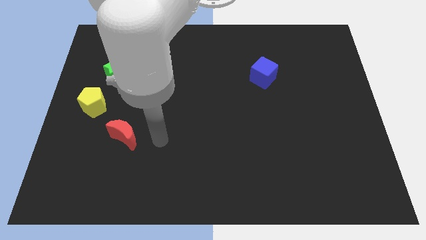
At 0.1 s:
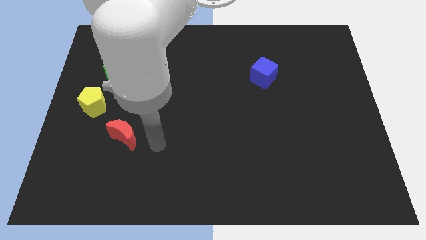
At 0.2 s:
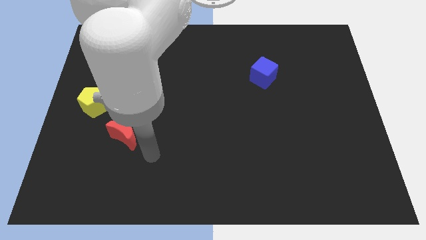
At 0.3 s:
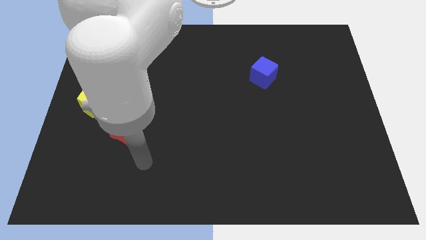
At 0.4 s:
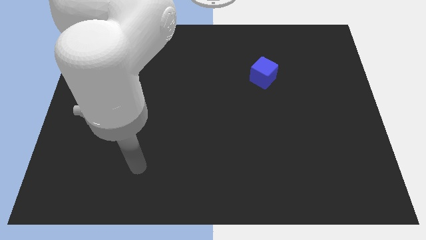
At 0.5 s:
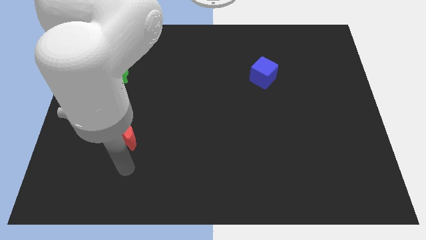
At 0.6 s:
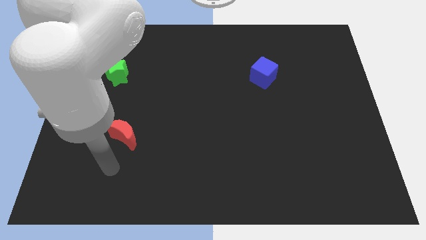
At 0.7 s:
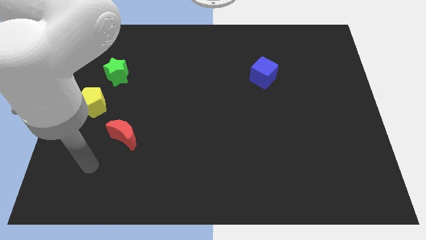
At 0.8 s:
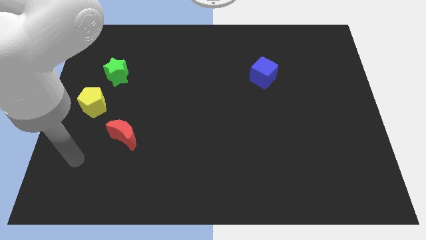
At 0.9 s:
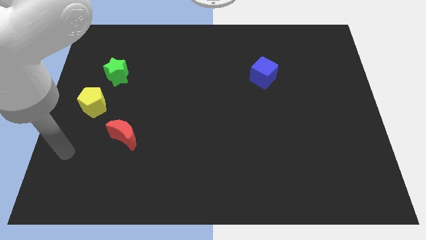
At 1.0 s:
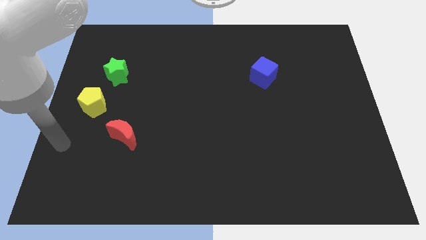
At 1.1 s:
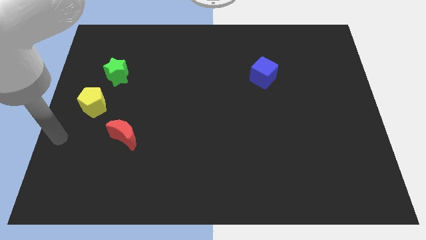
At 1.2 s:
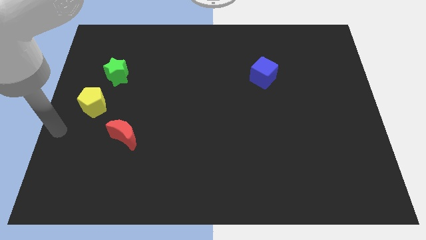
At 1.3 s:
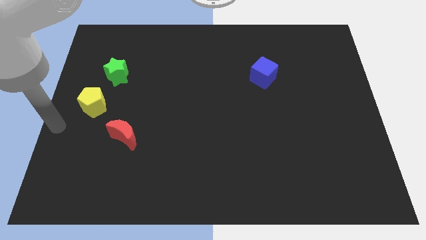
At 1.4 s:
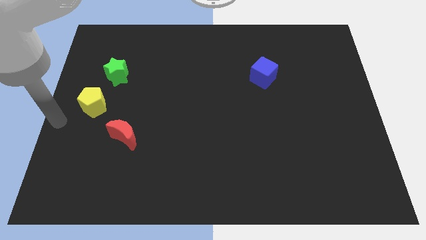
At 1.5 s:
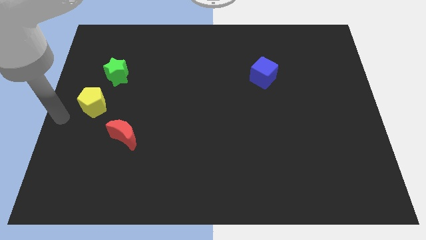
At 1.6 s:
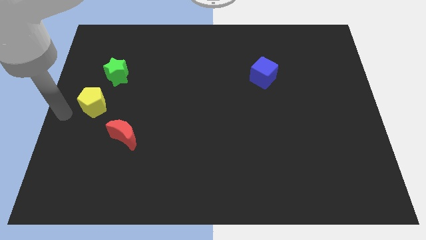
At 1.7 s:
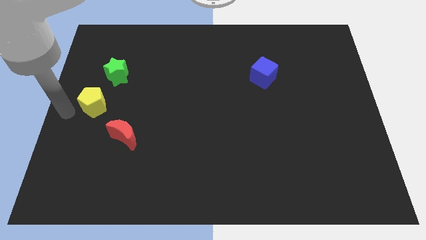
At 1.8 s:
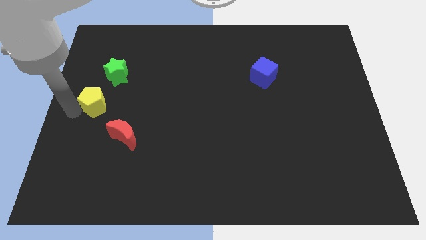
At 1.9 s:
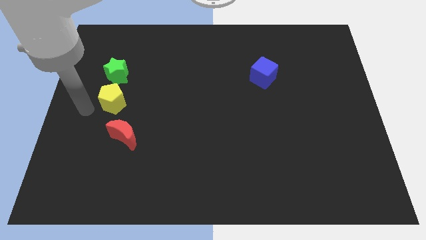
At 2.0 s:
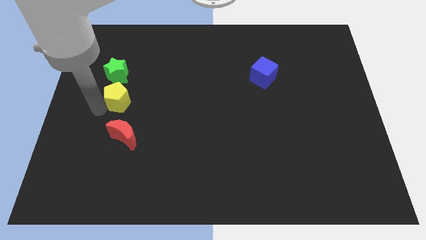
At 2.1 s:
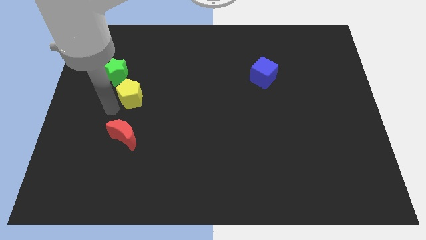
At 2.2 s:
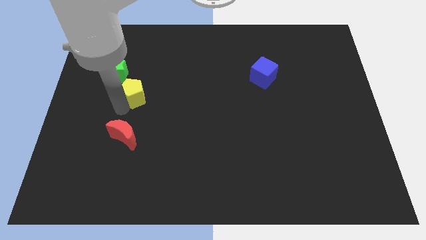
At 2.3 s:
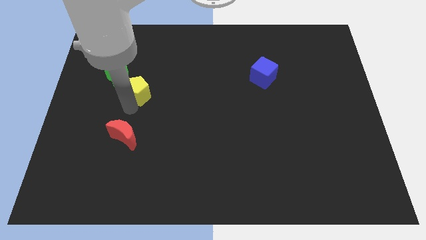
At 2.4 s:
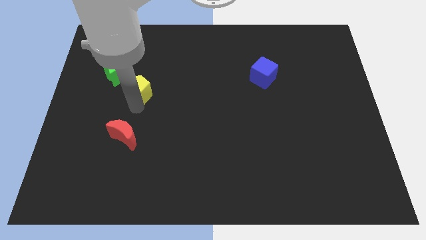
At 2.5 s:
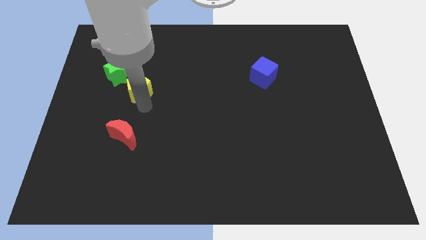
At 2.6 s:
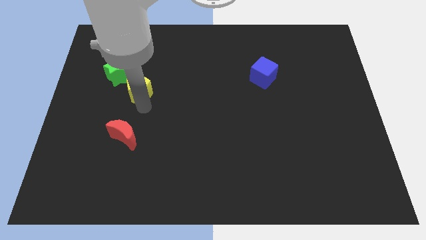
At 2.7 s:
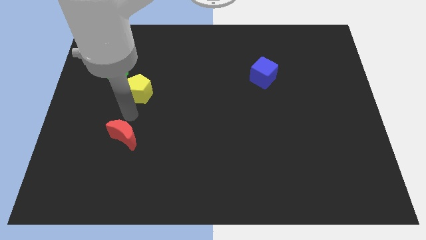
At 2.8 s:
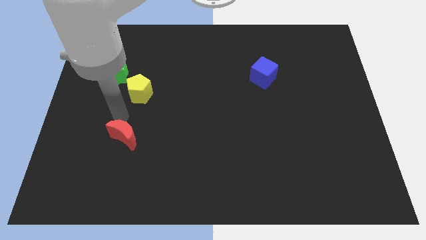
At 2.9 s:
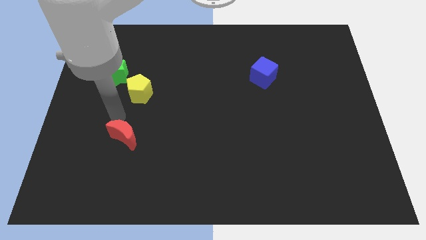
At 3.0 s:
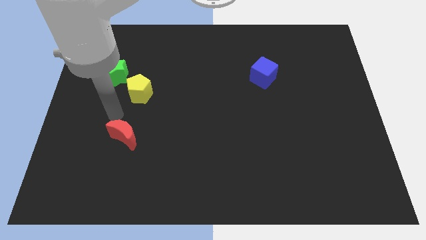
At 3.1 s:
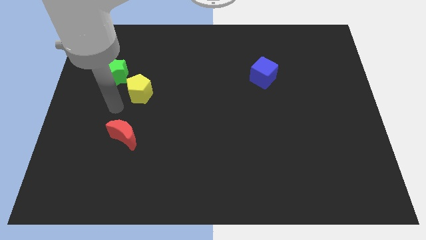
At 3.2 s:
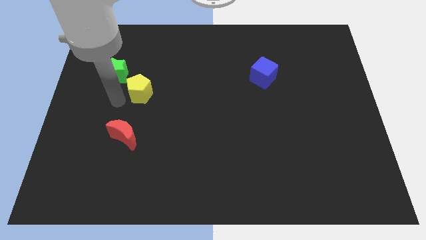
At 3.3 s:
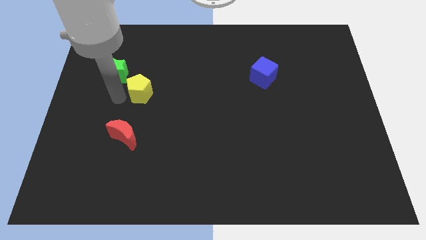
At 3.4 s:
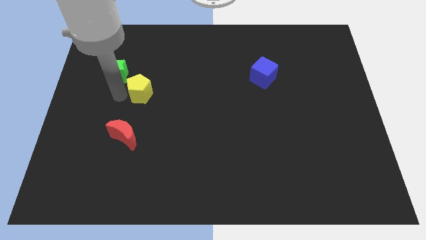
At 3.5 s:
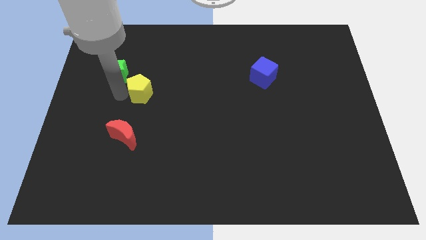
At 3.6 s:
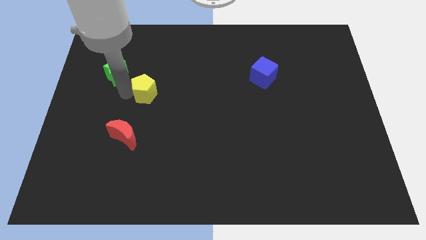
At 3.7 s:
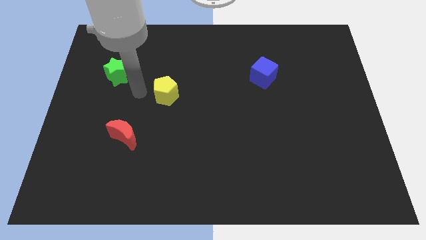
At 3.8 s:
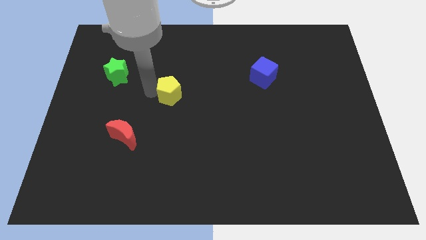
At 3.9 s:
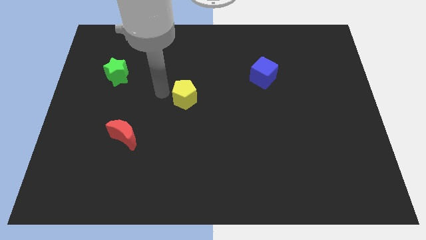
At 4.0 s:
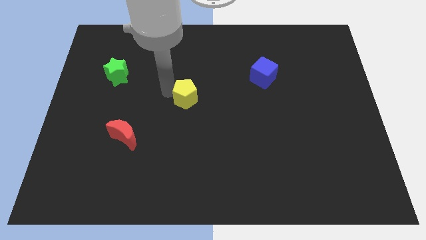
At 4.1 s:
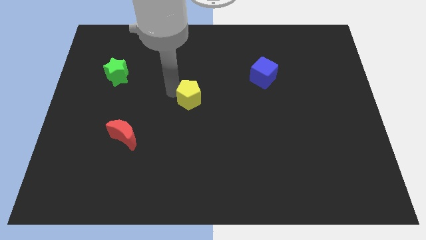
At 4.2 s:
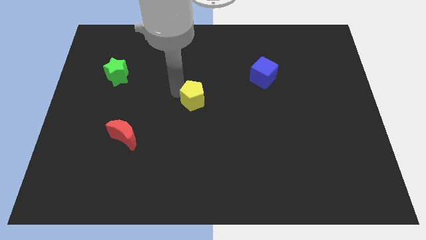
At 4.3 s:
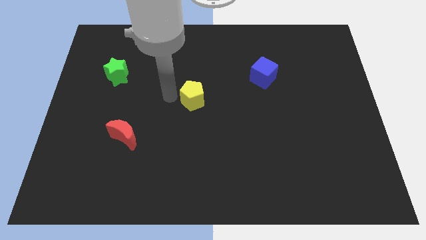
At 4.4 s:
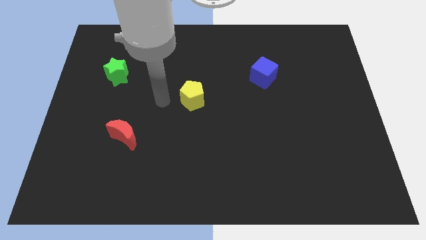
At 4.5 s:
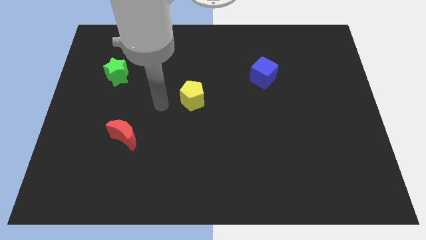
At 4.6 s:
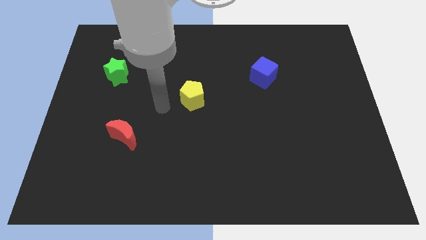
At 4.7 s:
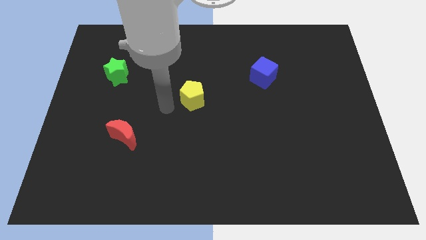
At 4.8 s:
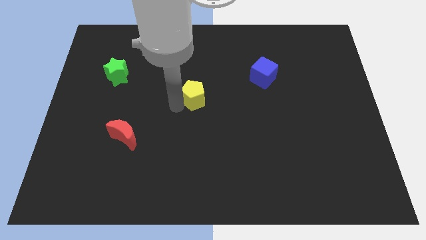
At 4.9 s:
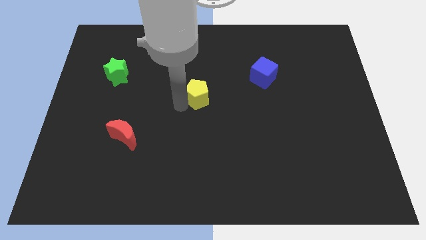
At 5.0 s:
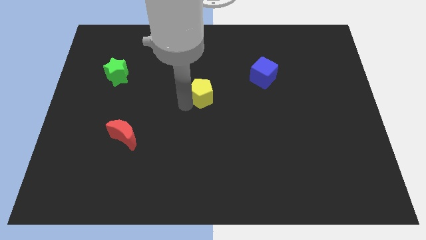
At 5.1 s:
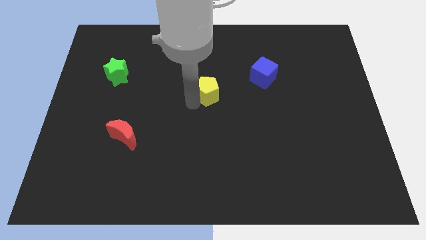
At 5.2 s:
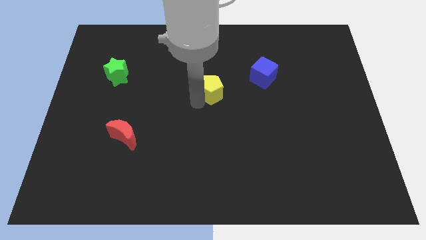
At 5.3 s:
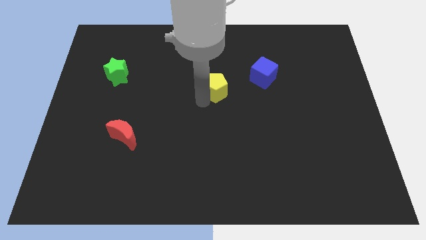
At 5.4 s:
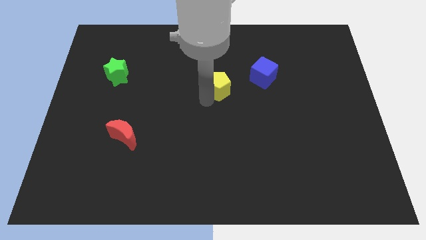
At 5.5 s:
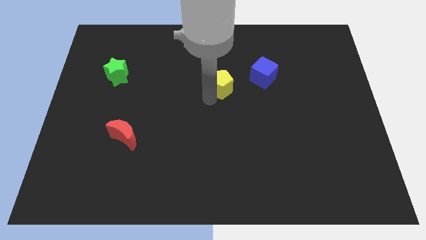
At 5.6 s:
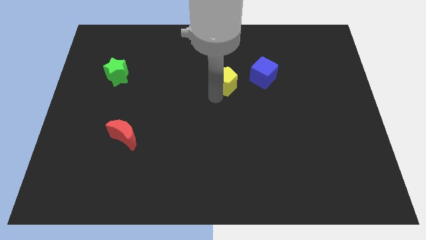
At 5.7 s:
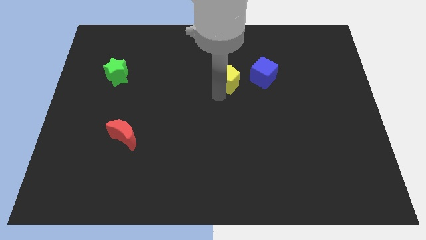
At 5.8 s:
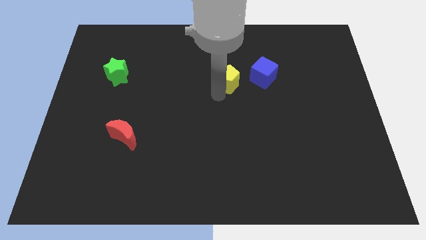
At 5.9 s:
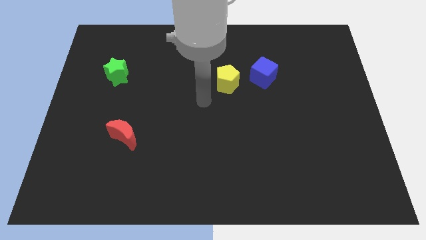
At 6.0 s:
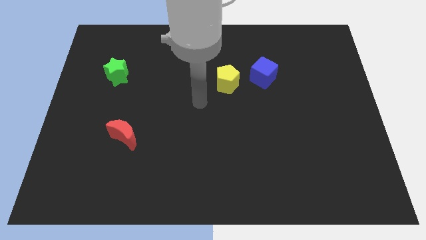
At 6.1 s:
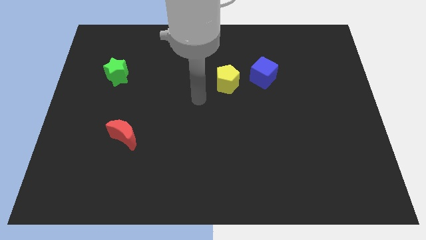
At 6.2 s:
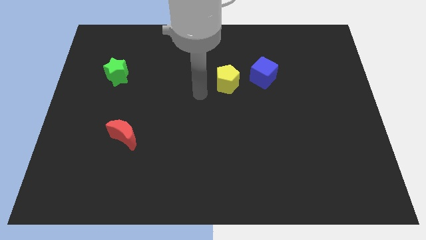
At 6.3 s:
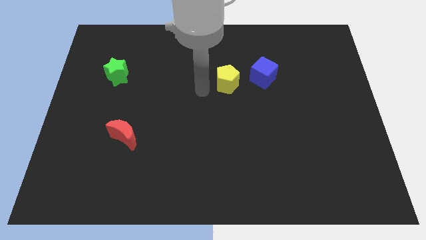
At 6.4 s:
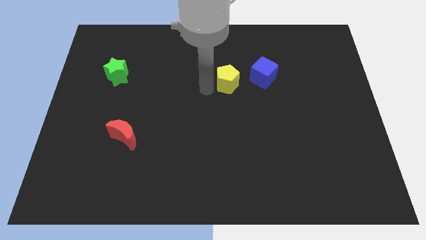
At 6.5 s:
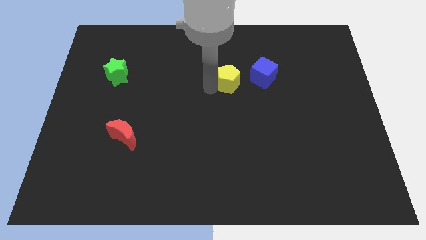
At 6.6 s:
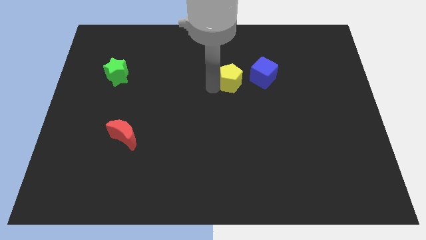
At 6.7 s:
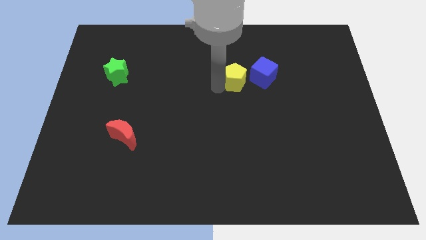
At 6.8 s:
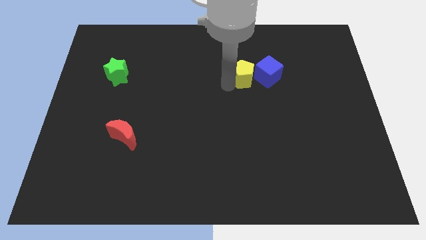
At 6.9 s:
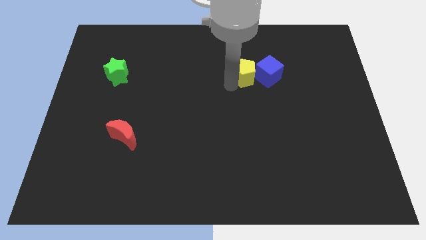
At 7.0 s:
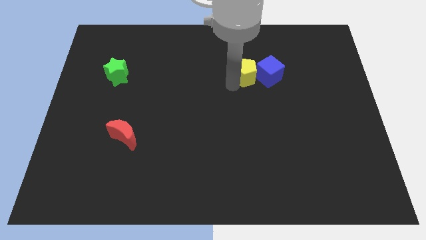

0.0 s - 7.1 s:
move the yellow pentagon towards the cube

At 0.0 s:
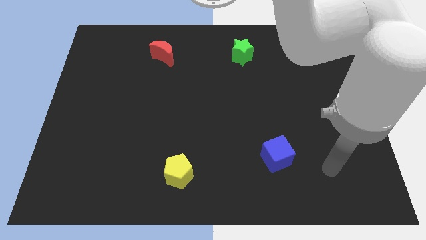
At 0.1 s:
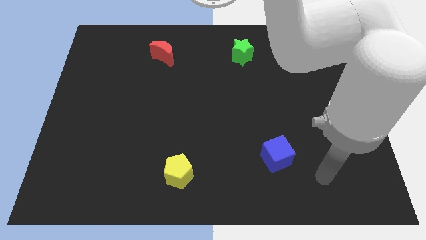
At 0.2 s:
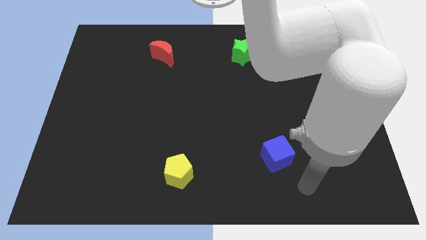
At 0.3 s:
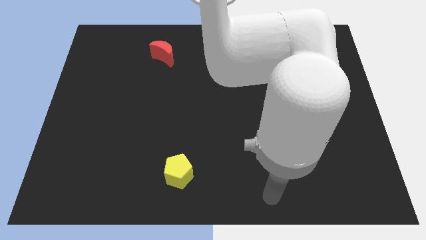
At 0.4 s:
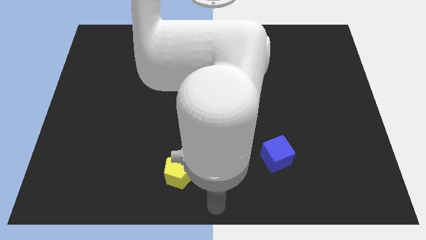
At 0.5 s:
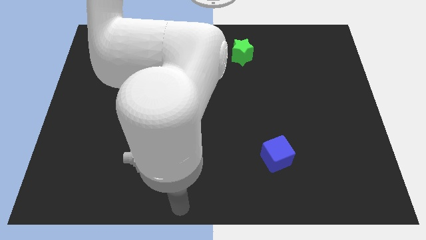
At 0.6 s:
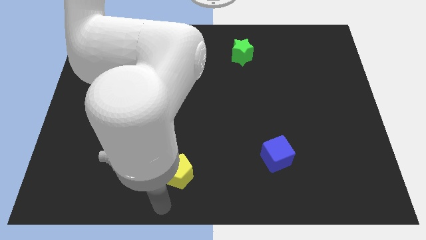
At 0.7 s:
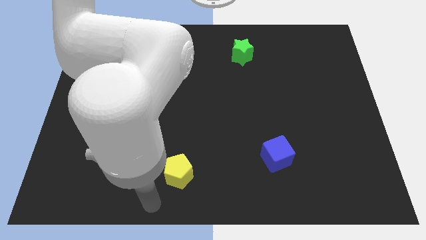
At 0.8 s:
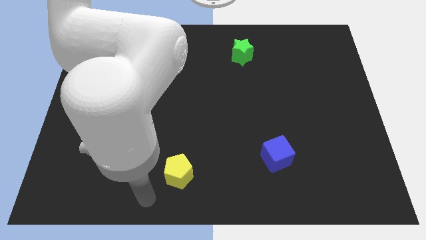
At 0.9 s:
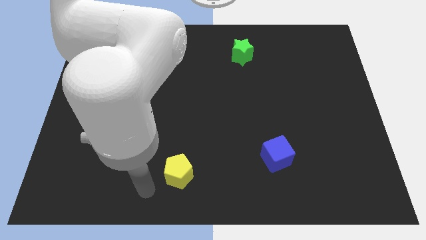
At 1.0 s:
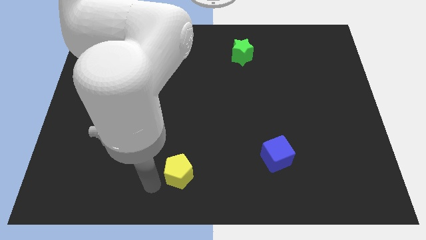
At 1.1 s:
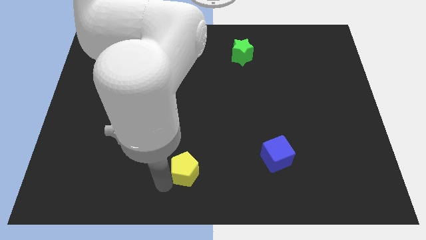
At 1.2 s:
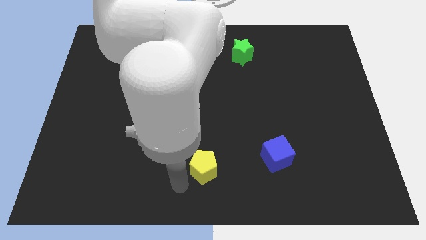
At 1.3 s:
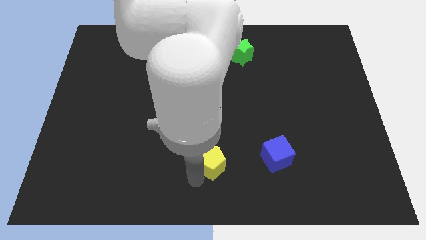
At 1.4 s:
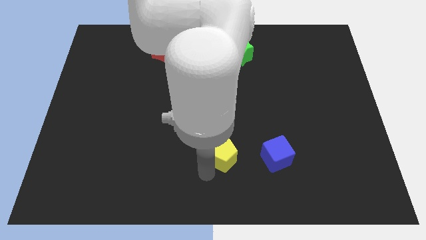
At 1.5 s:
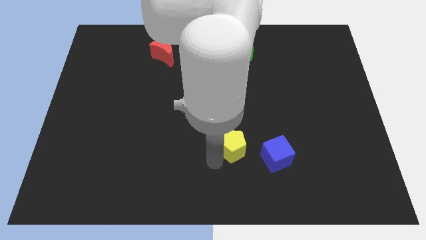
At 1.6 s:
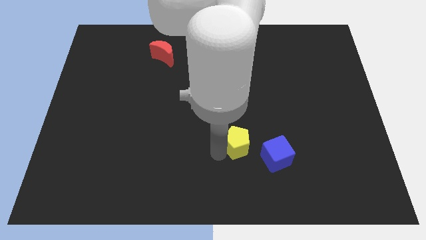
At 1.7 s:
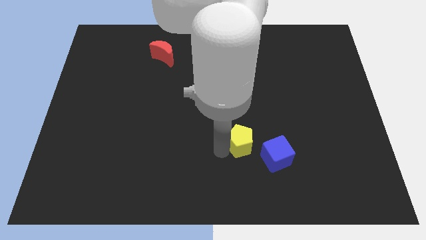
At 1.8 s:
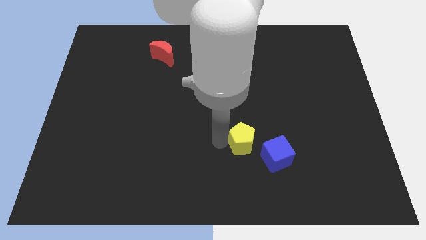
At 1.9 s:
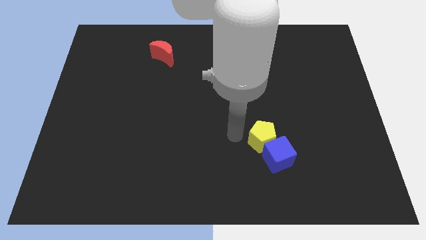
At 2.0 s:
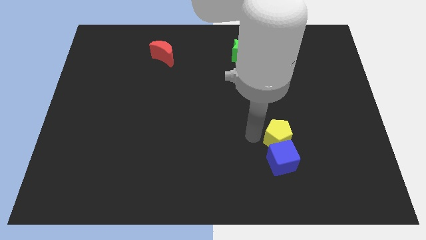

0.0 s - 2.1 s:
put the yellow block next to the blue block
